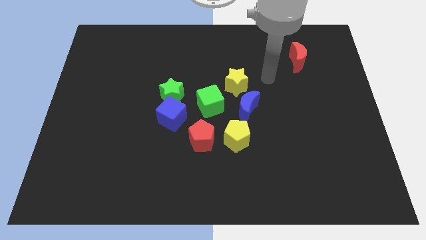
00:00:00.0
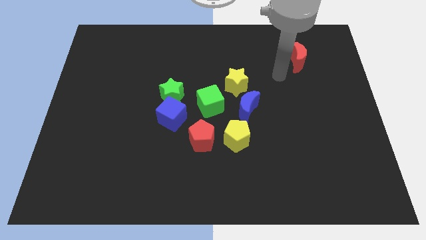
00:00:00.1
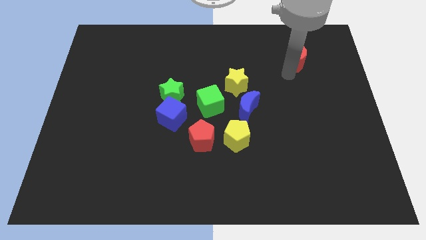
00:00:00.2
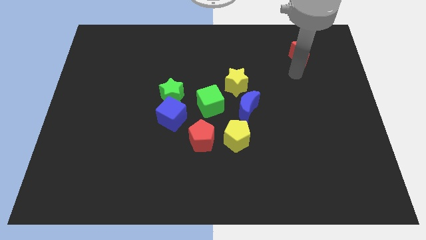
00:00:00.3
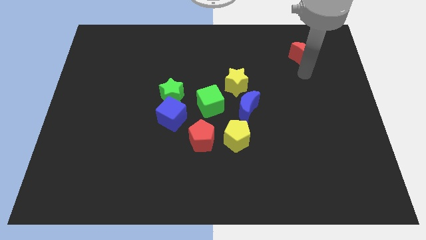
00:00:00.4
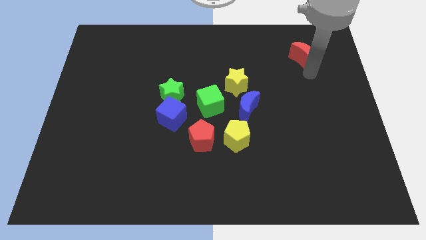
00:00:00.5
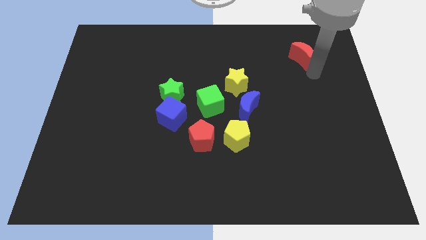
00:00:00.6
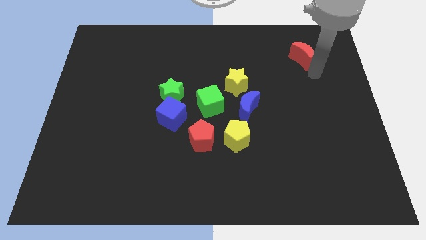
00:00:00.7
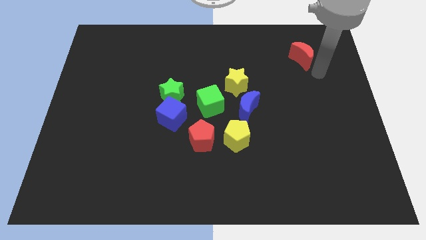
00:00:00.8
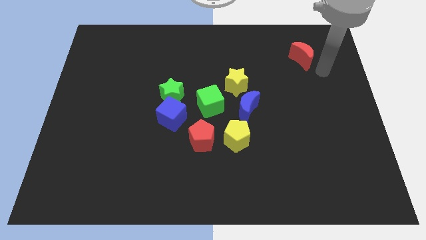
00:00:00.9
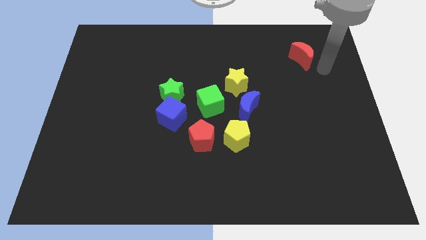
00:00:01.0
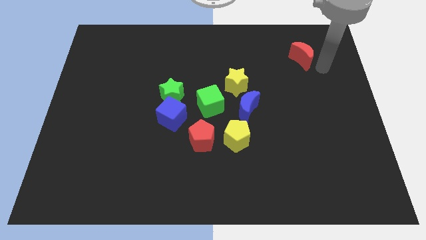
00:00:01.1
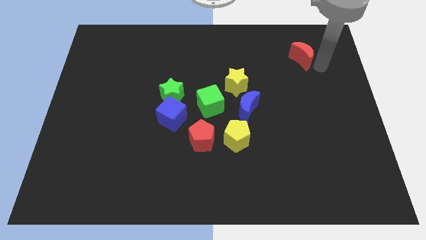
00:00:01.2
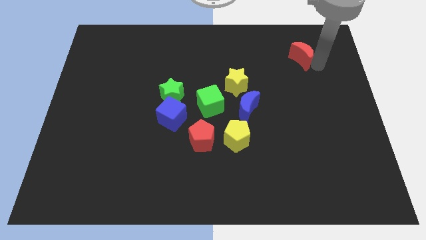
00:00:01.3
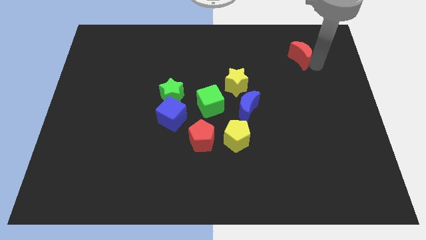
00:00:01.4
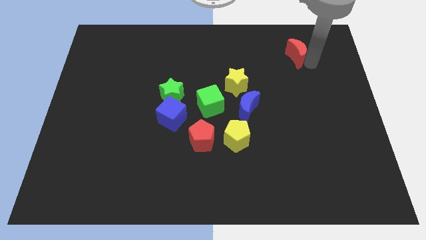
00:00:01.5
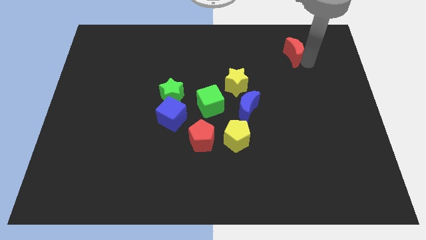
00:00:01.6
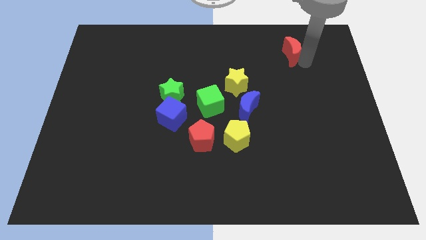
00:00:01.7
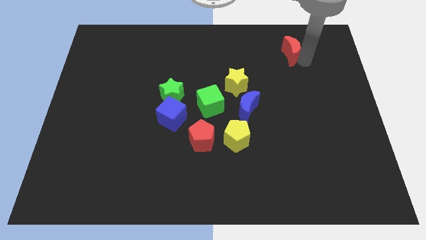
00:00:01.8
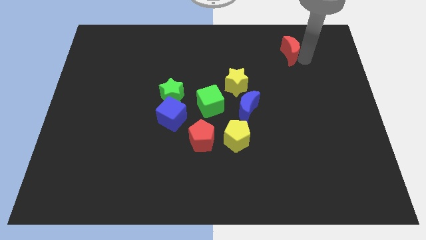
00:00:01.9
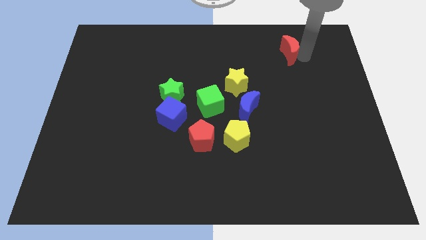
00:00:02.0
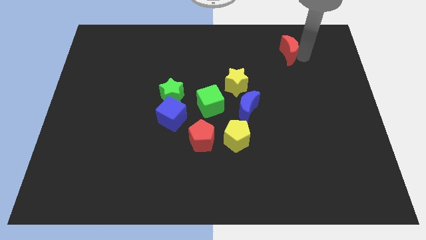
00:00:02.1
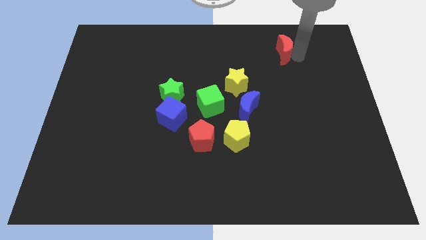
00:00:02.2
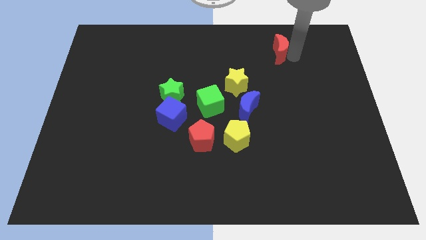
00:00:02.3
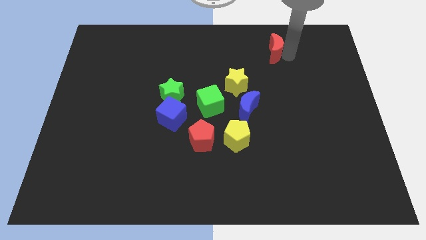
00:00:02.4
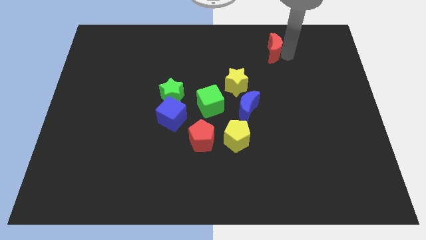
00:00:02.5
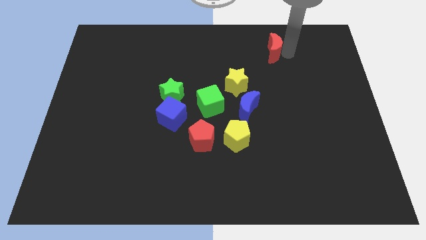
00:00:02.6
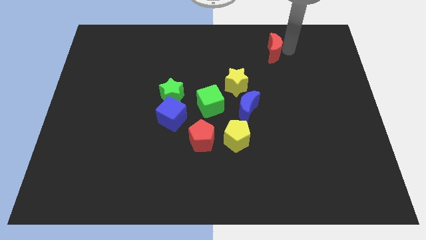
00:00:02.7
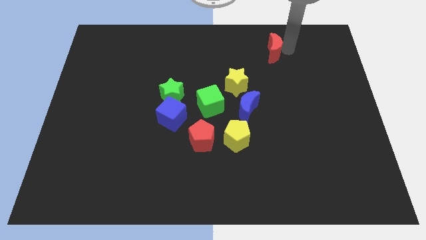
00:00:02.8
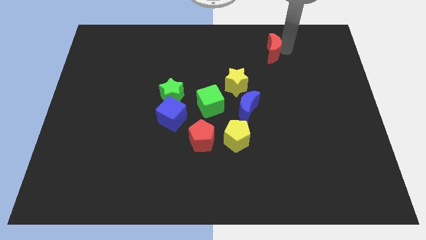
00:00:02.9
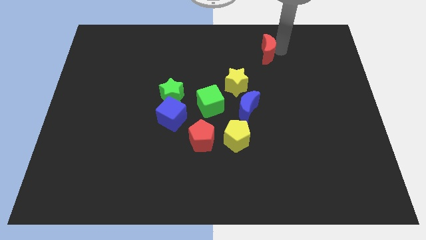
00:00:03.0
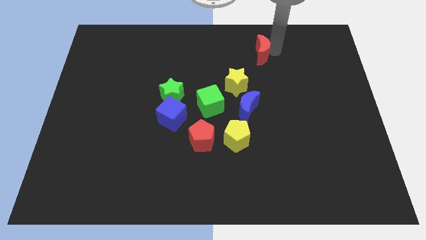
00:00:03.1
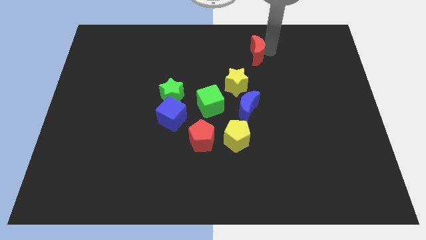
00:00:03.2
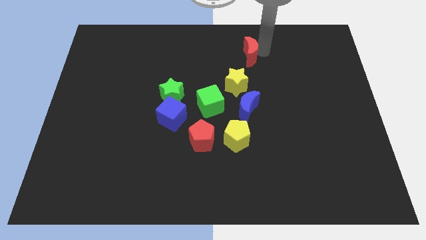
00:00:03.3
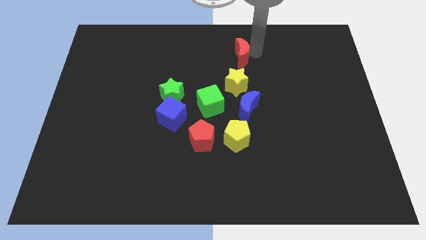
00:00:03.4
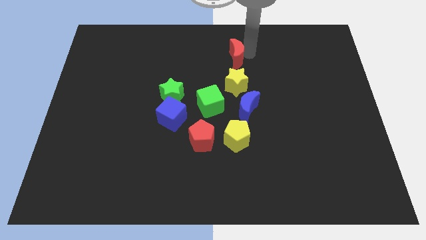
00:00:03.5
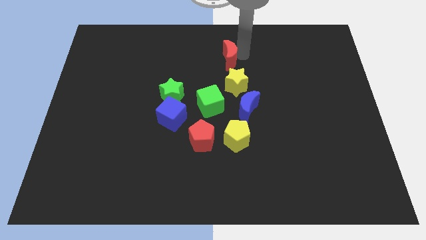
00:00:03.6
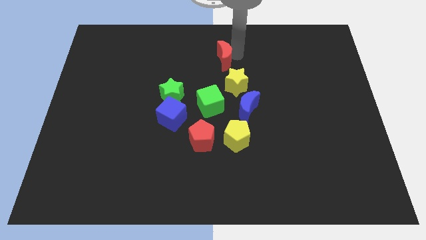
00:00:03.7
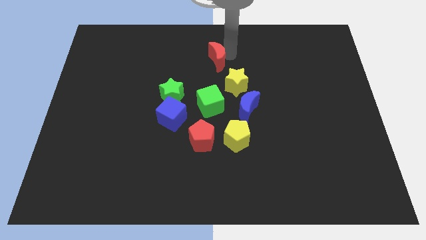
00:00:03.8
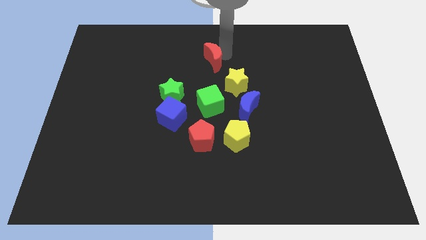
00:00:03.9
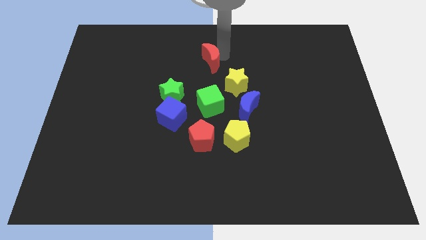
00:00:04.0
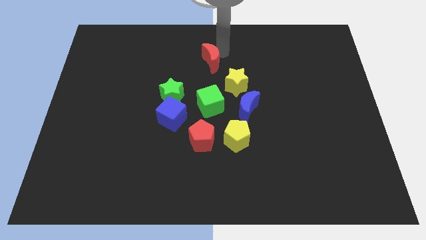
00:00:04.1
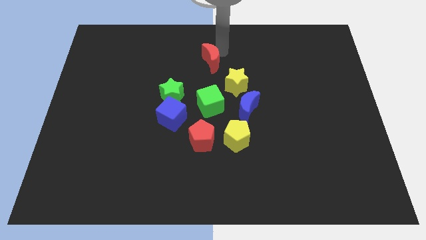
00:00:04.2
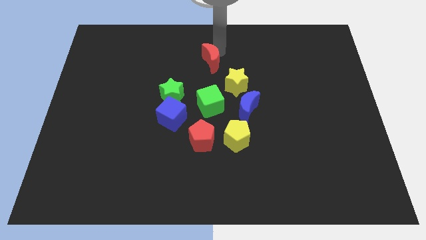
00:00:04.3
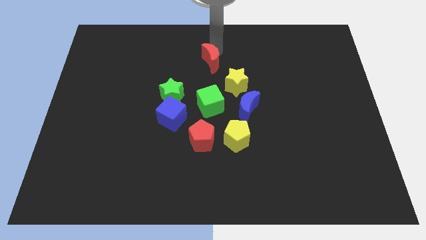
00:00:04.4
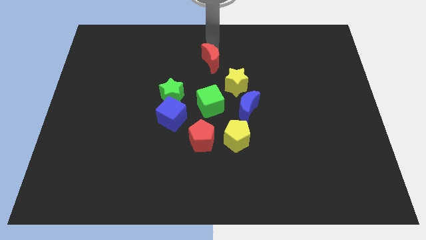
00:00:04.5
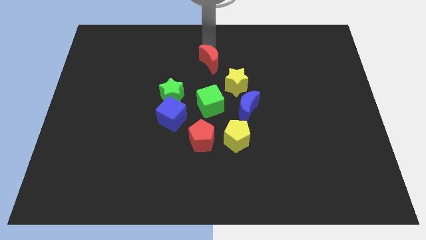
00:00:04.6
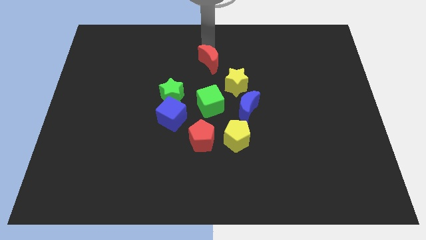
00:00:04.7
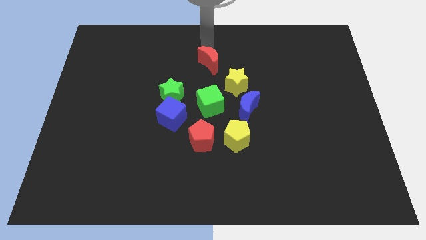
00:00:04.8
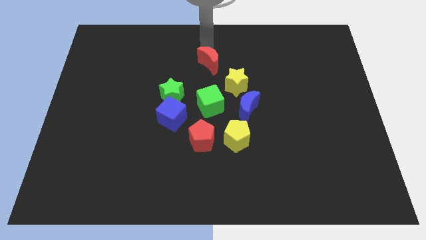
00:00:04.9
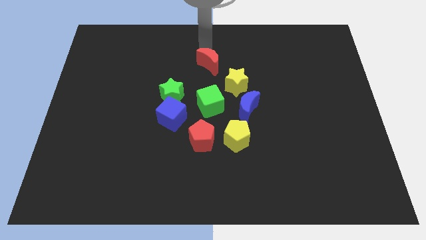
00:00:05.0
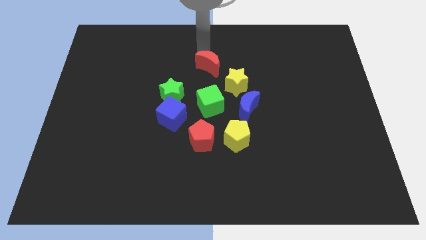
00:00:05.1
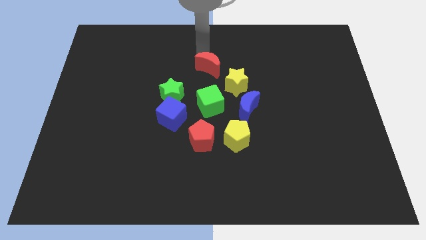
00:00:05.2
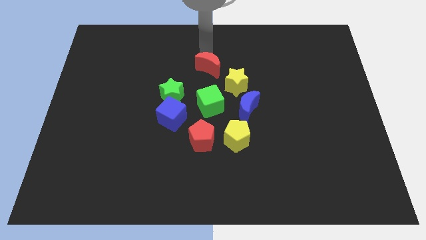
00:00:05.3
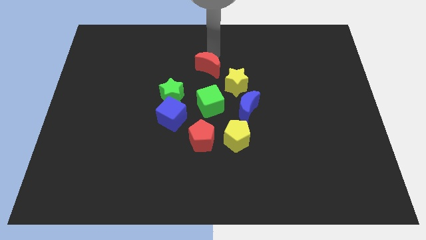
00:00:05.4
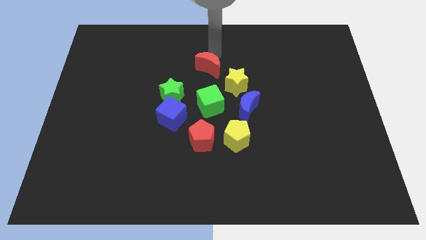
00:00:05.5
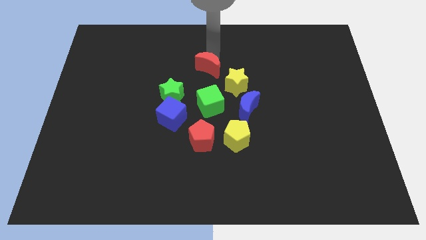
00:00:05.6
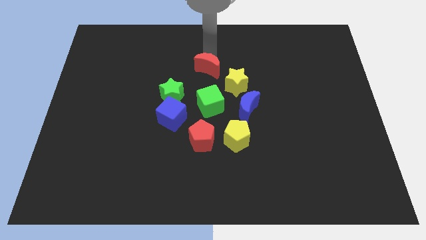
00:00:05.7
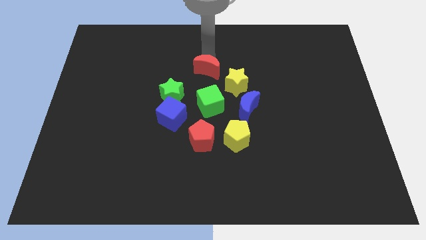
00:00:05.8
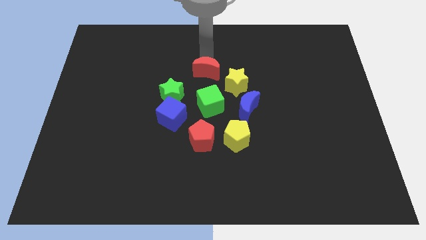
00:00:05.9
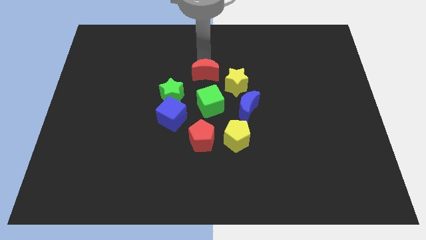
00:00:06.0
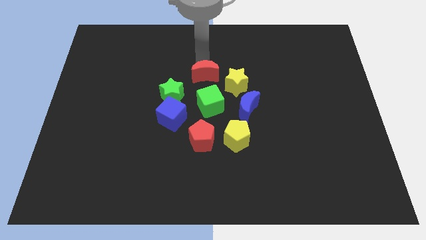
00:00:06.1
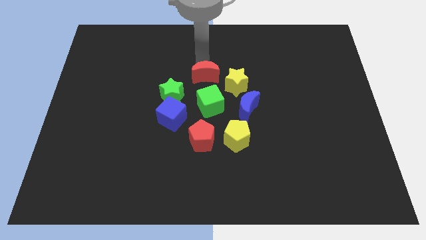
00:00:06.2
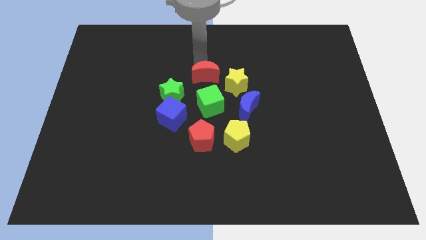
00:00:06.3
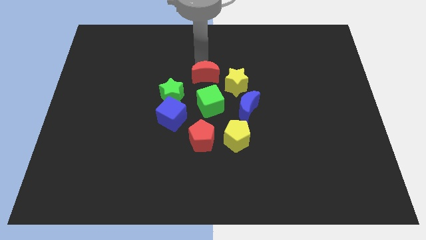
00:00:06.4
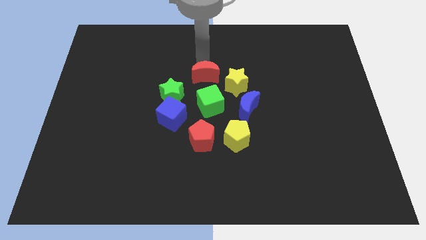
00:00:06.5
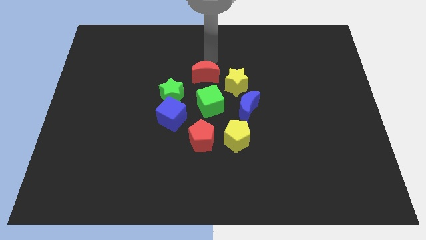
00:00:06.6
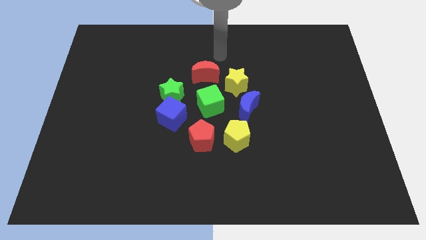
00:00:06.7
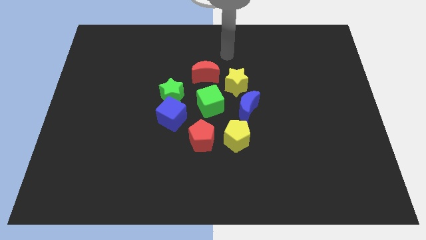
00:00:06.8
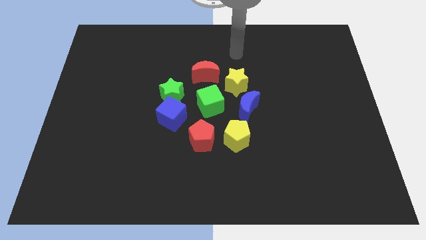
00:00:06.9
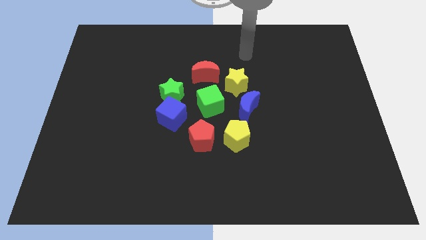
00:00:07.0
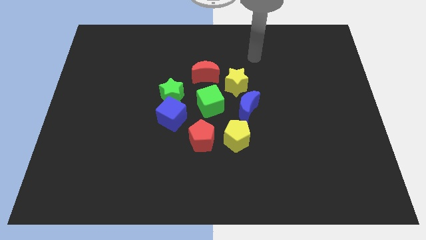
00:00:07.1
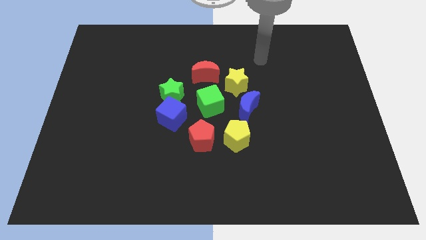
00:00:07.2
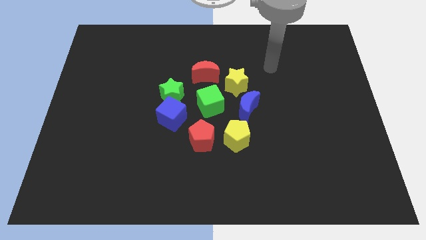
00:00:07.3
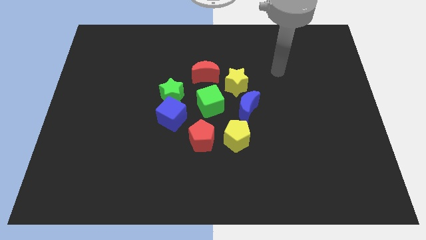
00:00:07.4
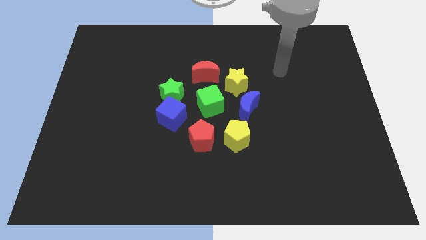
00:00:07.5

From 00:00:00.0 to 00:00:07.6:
push the red moon to the top side of the green cube

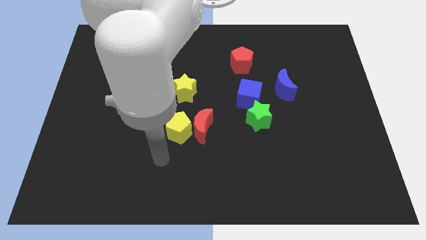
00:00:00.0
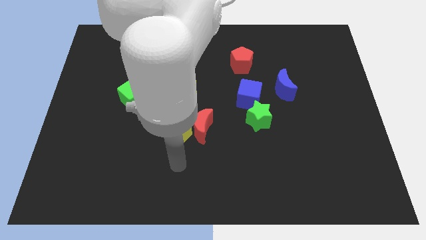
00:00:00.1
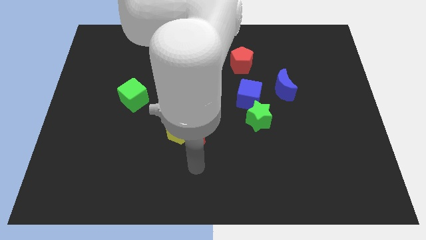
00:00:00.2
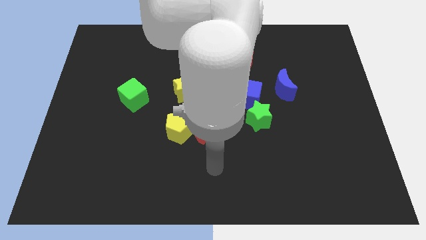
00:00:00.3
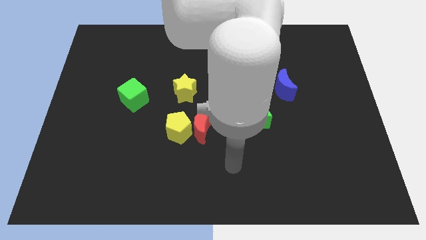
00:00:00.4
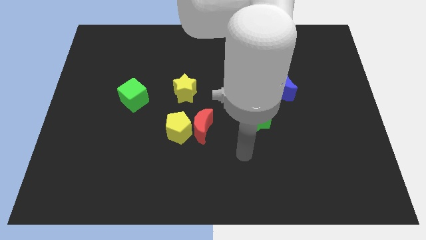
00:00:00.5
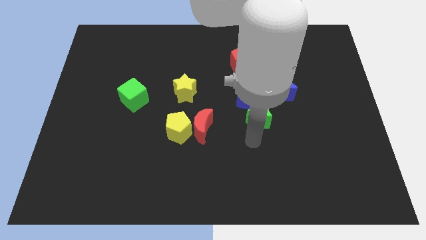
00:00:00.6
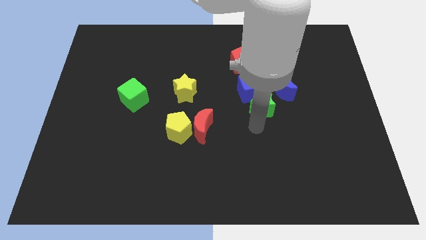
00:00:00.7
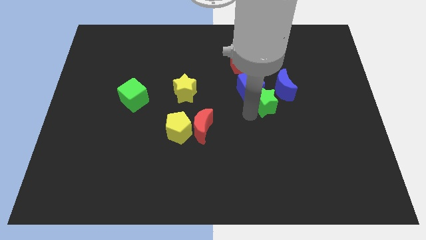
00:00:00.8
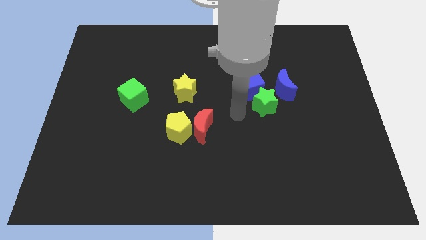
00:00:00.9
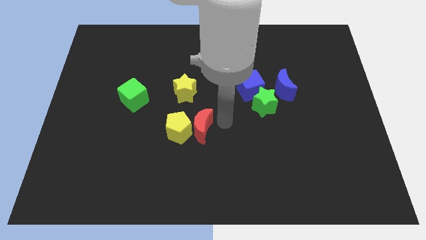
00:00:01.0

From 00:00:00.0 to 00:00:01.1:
move the green star to the bottom right side of the blue cube

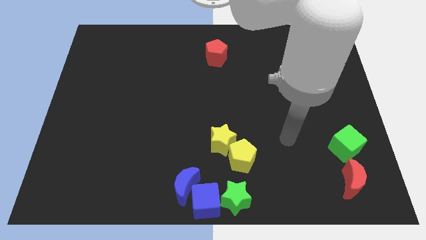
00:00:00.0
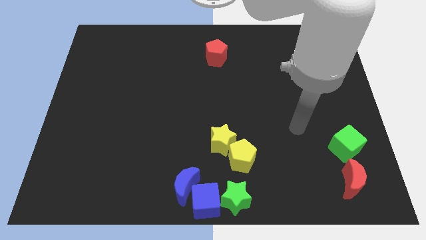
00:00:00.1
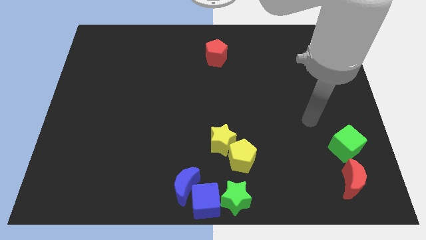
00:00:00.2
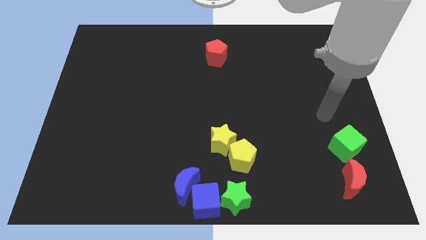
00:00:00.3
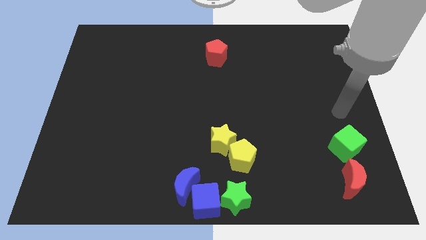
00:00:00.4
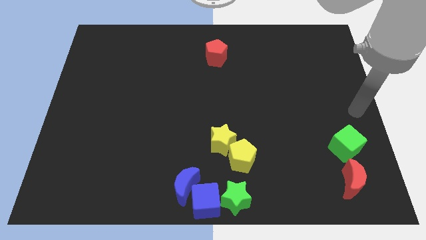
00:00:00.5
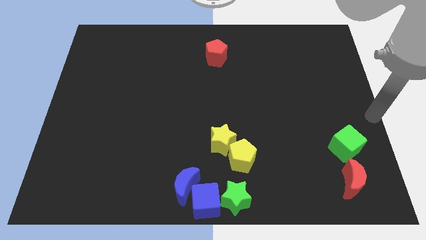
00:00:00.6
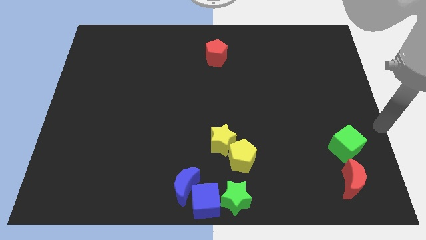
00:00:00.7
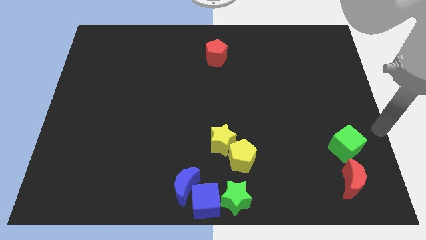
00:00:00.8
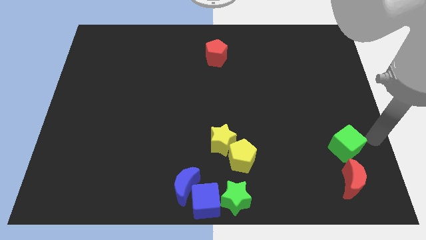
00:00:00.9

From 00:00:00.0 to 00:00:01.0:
move your arm away from the green star
